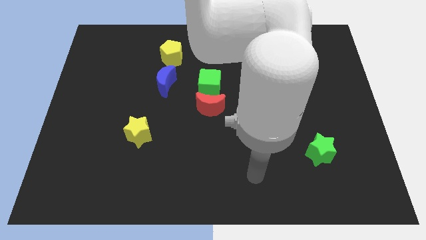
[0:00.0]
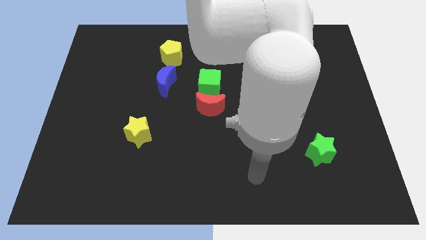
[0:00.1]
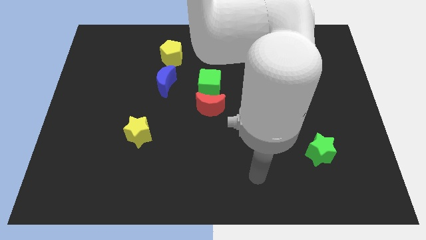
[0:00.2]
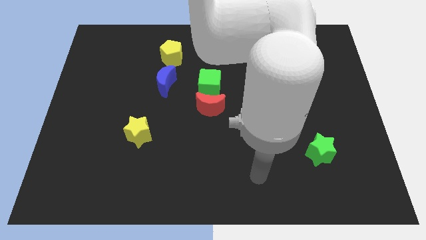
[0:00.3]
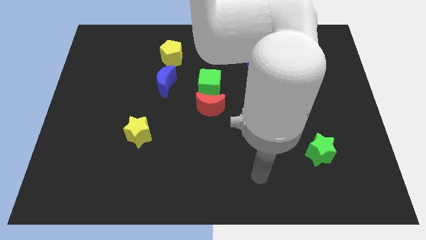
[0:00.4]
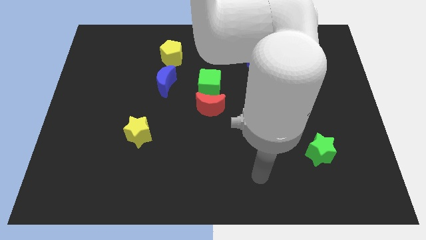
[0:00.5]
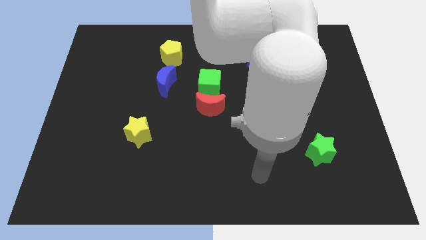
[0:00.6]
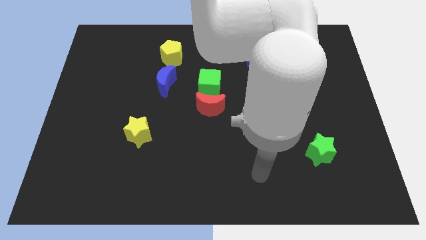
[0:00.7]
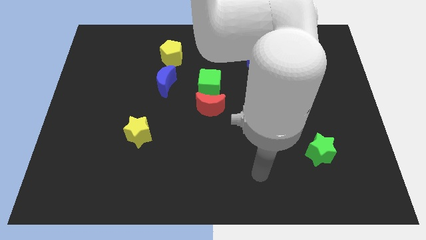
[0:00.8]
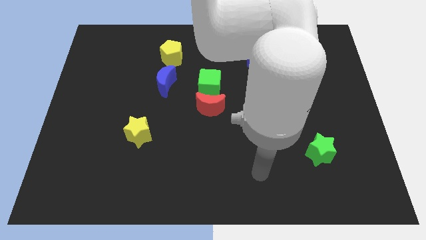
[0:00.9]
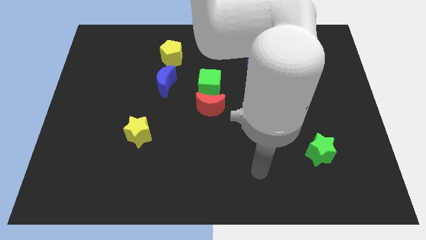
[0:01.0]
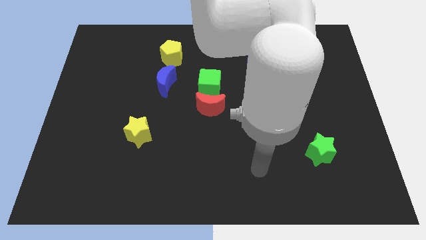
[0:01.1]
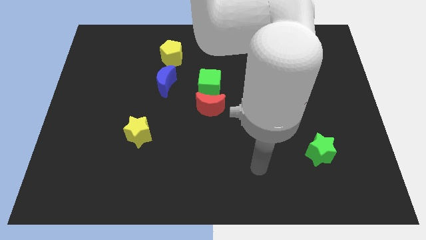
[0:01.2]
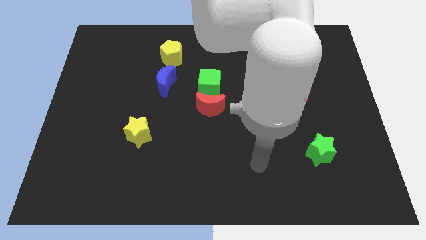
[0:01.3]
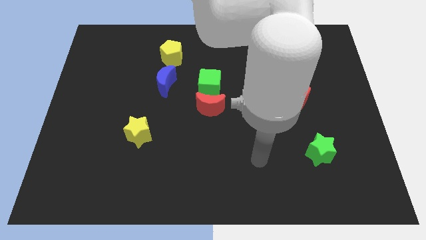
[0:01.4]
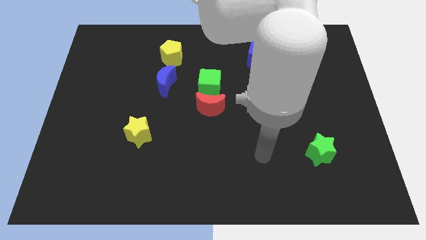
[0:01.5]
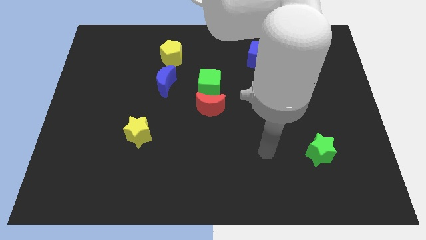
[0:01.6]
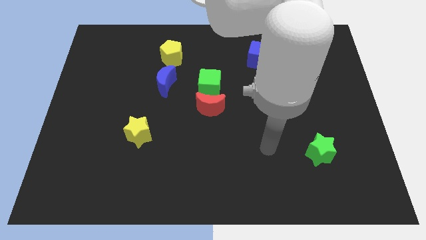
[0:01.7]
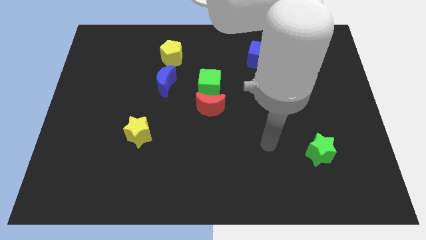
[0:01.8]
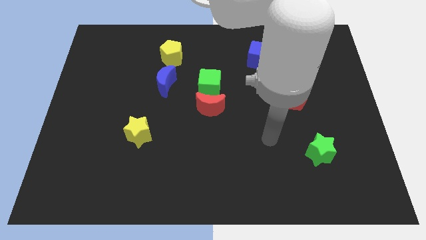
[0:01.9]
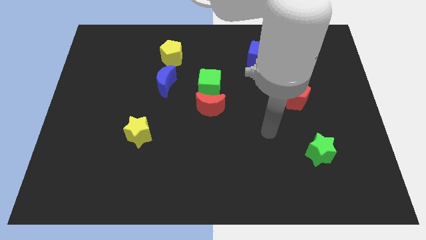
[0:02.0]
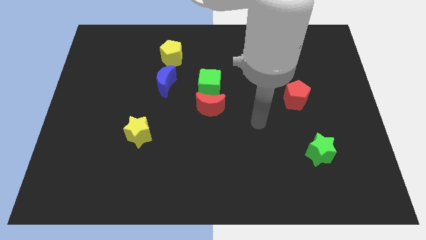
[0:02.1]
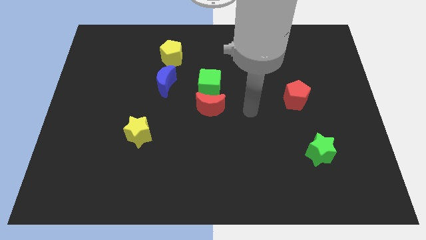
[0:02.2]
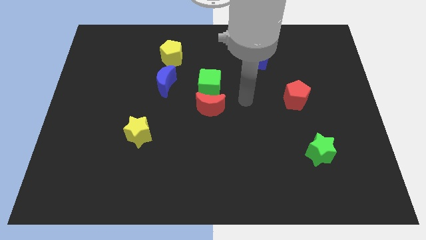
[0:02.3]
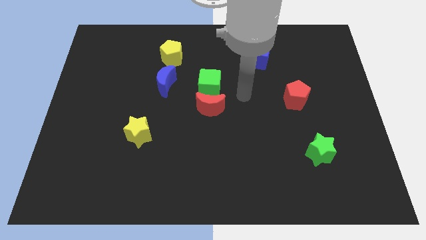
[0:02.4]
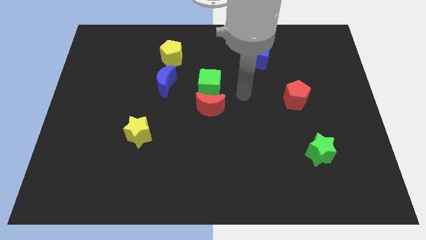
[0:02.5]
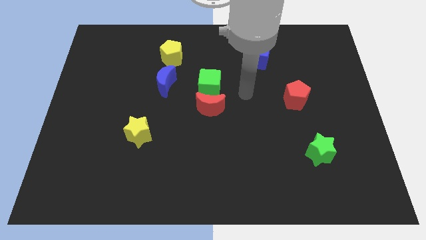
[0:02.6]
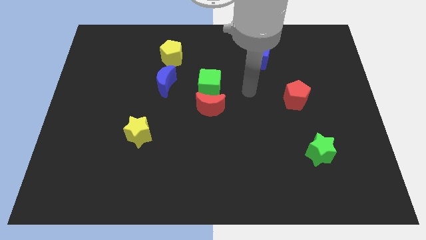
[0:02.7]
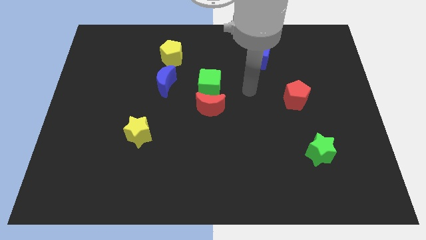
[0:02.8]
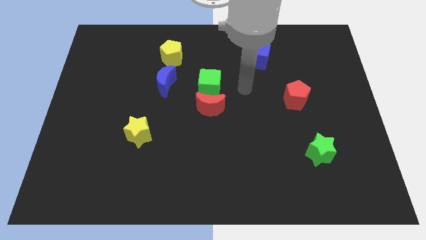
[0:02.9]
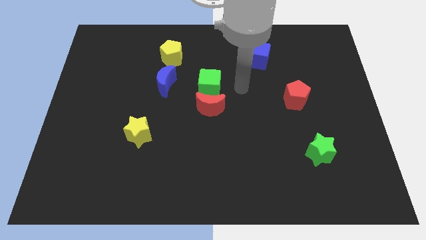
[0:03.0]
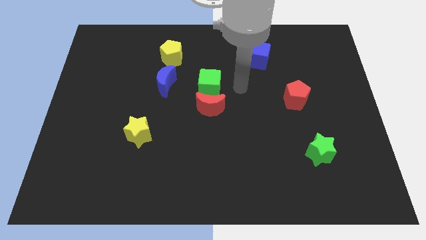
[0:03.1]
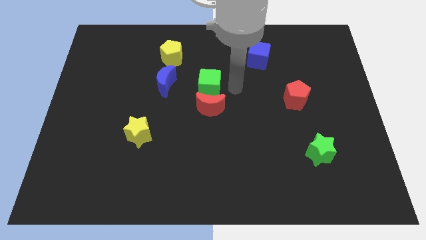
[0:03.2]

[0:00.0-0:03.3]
go and place your hand to the right of the green cube

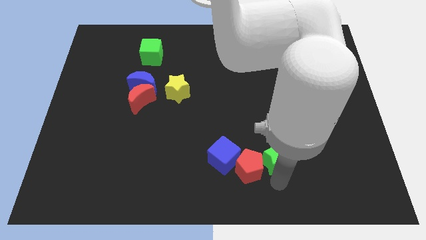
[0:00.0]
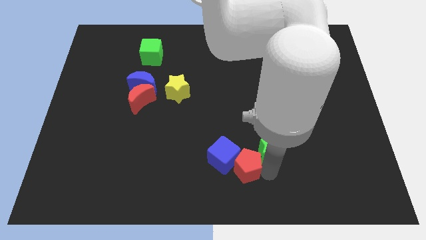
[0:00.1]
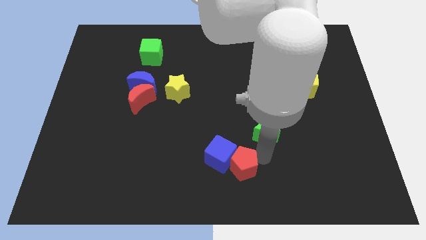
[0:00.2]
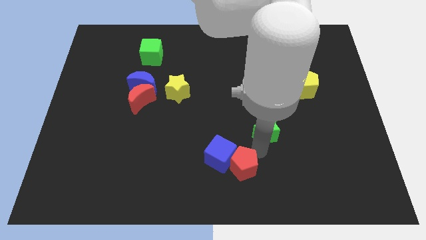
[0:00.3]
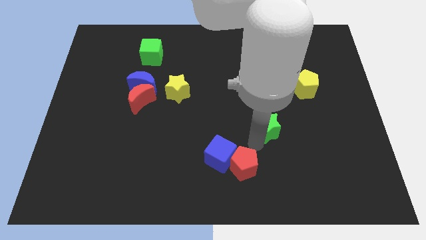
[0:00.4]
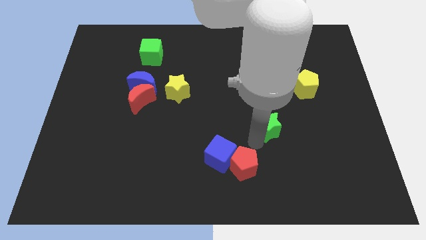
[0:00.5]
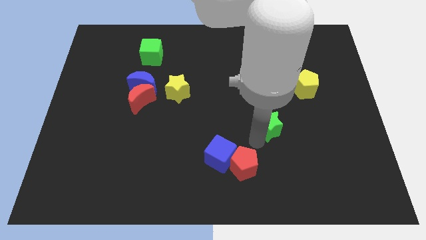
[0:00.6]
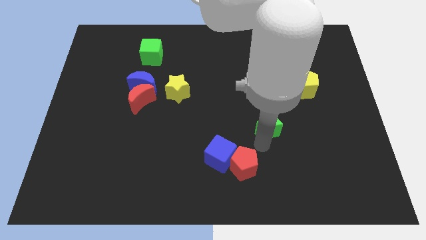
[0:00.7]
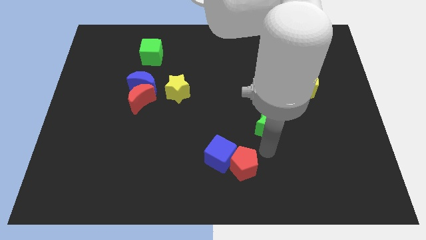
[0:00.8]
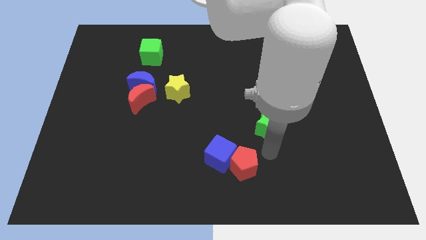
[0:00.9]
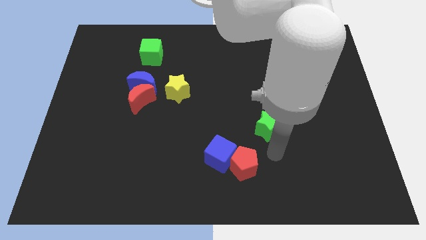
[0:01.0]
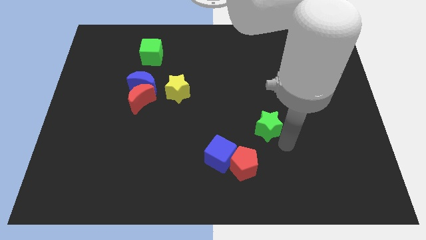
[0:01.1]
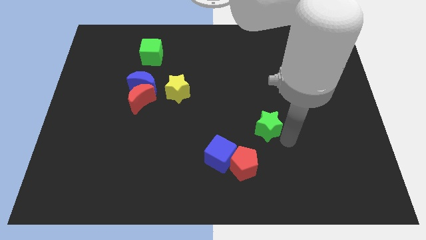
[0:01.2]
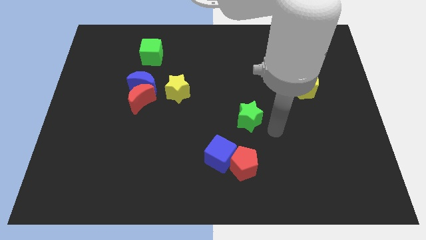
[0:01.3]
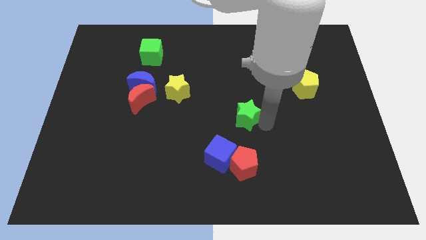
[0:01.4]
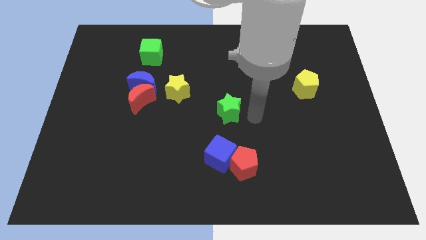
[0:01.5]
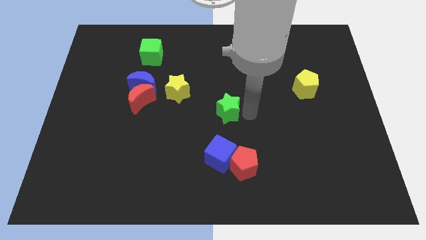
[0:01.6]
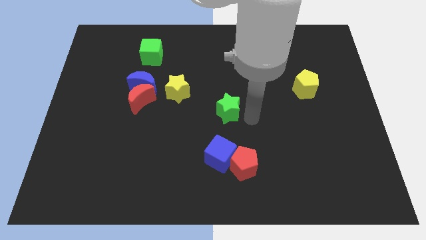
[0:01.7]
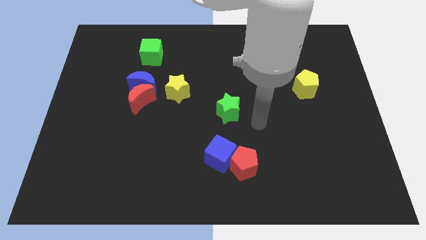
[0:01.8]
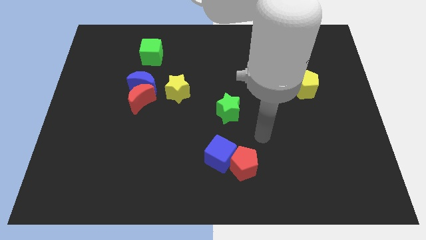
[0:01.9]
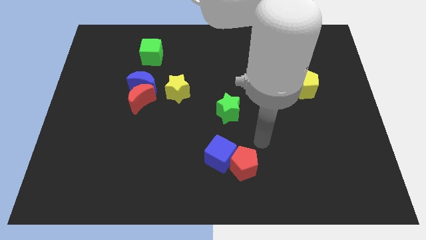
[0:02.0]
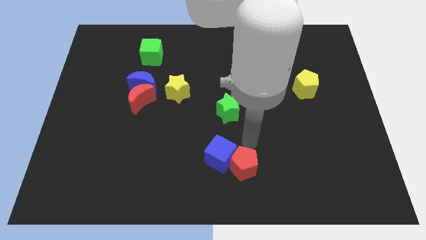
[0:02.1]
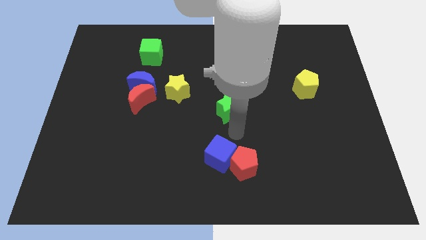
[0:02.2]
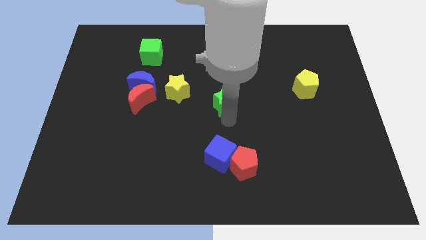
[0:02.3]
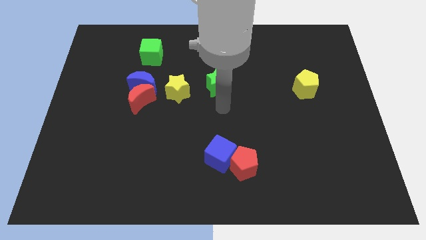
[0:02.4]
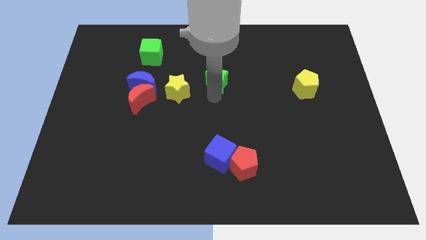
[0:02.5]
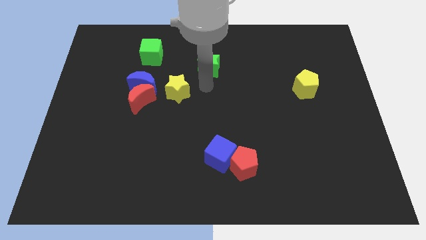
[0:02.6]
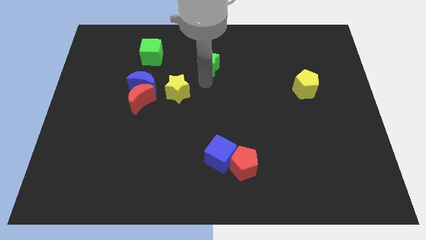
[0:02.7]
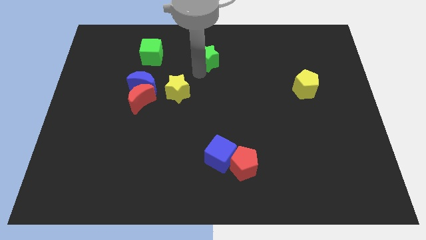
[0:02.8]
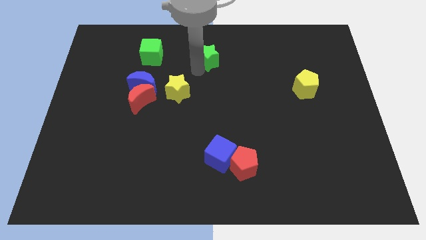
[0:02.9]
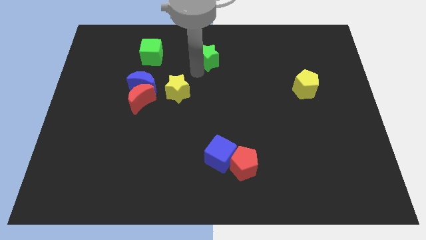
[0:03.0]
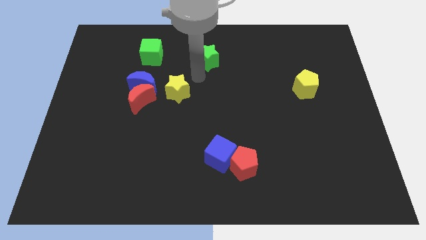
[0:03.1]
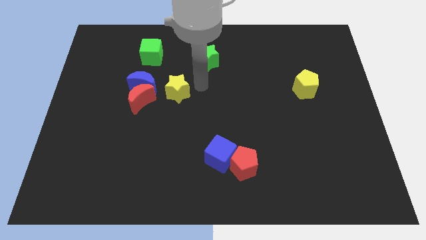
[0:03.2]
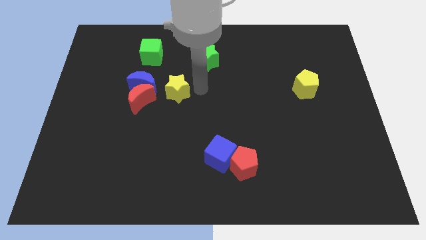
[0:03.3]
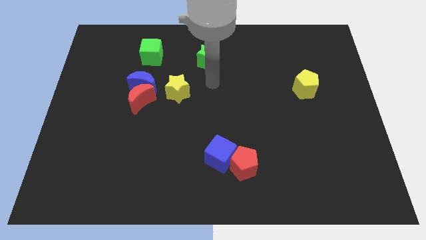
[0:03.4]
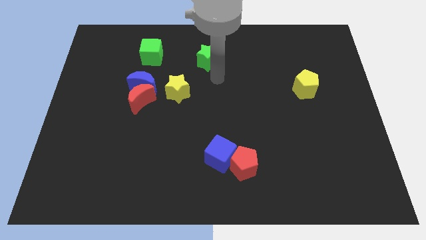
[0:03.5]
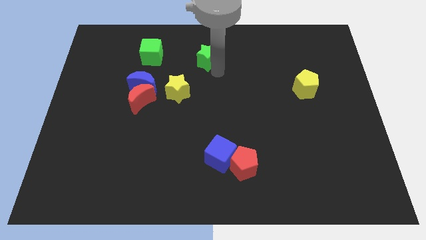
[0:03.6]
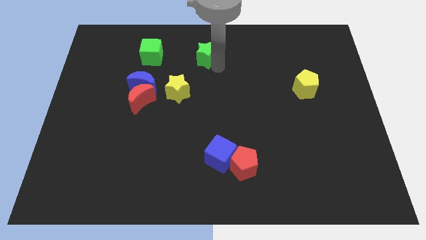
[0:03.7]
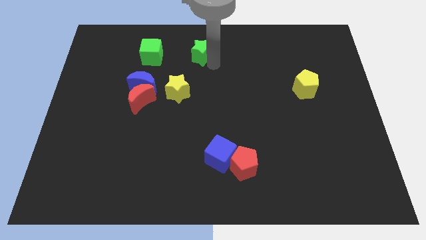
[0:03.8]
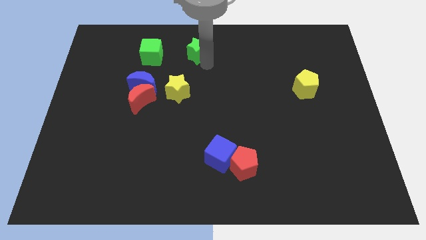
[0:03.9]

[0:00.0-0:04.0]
move the green star to the right of the green cube

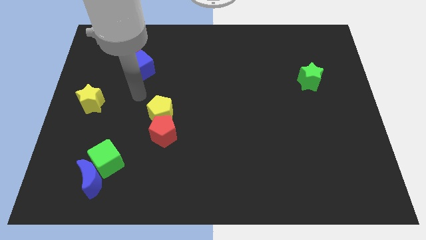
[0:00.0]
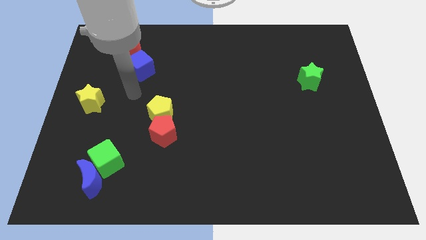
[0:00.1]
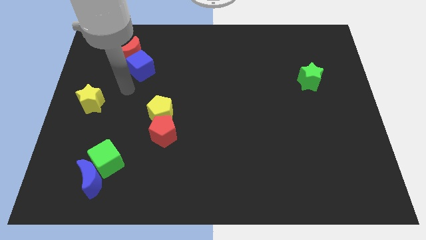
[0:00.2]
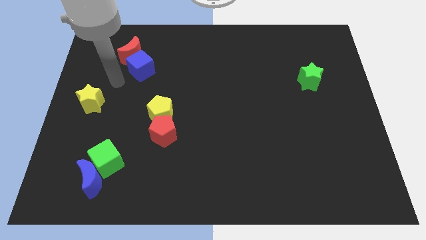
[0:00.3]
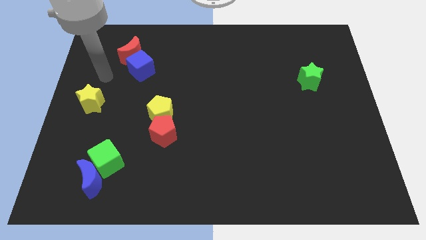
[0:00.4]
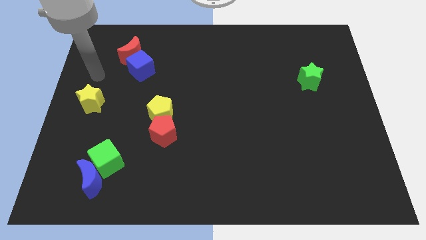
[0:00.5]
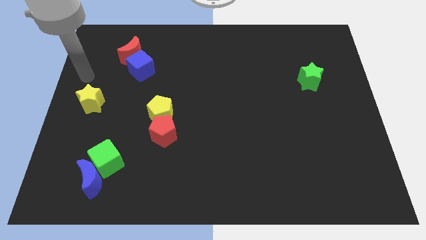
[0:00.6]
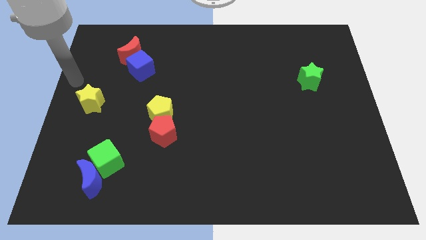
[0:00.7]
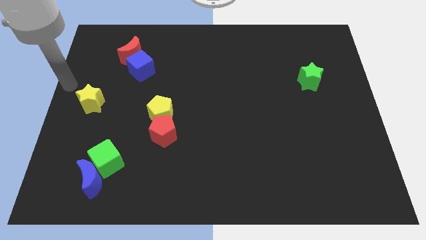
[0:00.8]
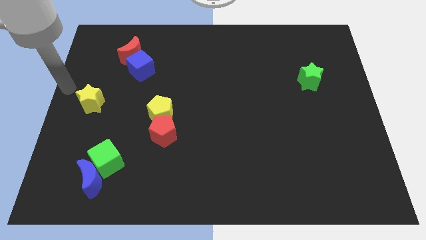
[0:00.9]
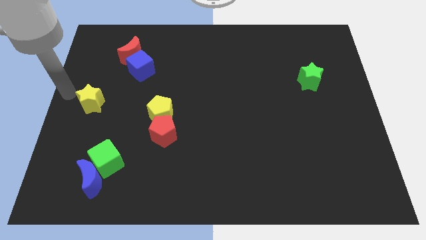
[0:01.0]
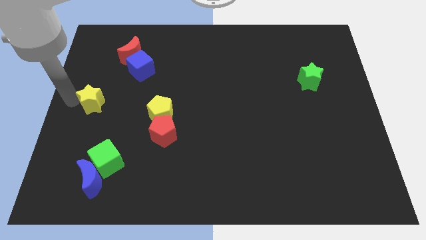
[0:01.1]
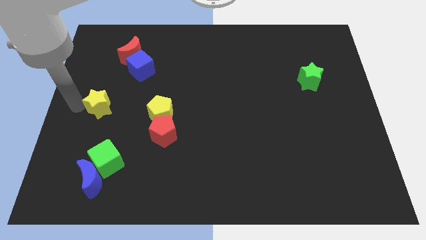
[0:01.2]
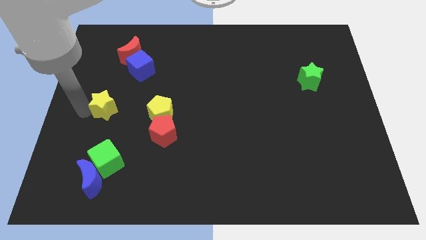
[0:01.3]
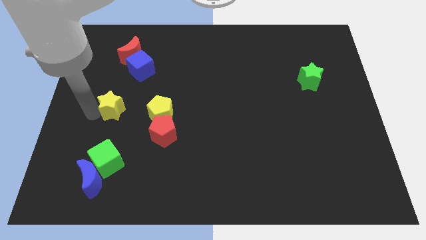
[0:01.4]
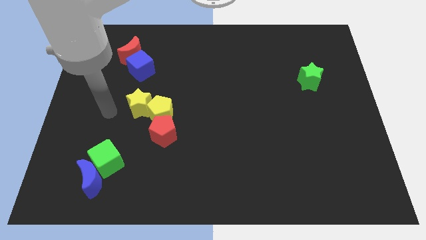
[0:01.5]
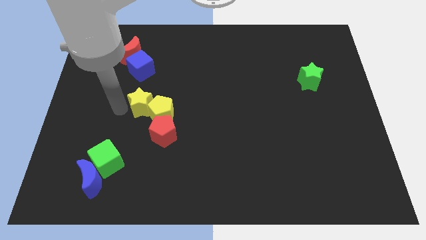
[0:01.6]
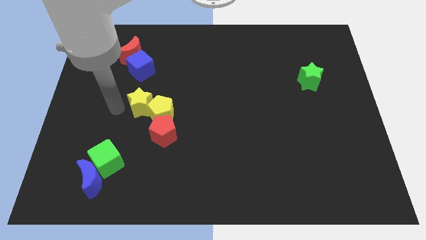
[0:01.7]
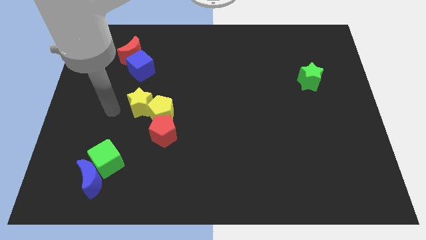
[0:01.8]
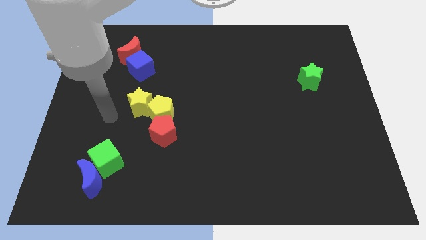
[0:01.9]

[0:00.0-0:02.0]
push the yellow star into the yellow pentagon towards the center of the board
